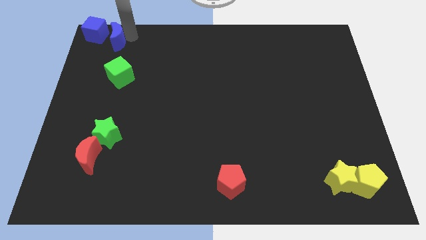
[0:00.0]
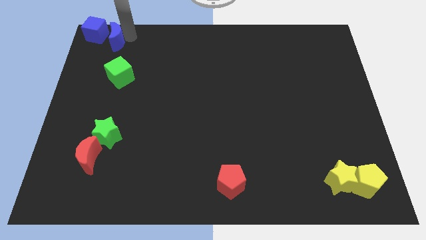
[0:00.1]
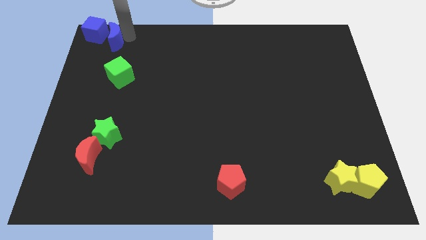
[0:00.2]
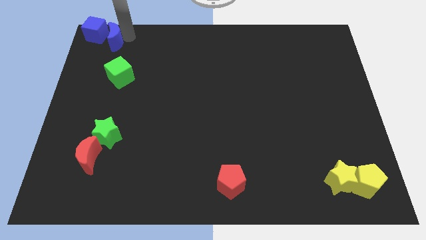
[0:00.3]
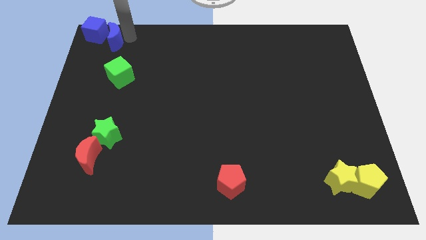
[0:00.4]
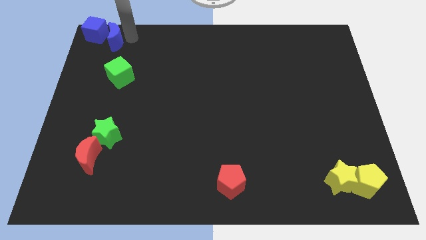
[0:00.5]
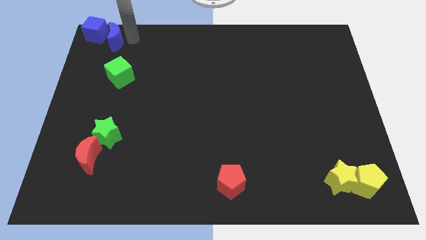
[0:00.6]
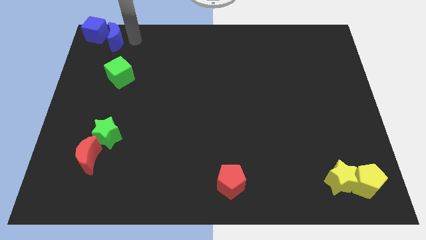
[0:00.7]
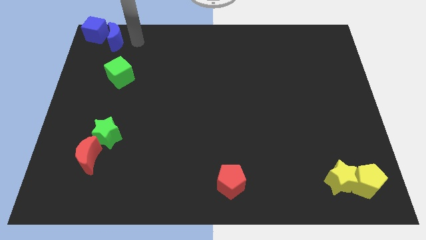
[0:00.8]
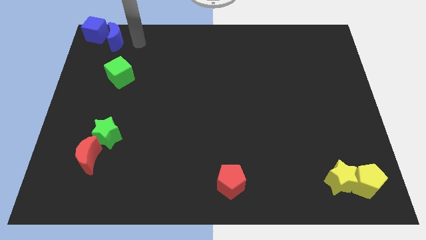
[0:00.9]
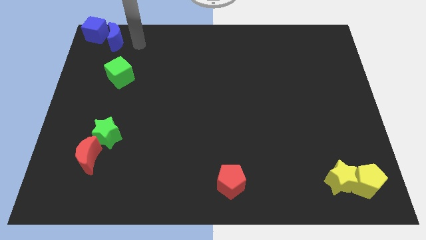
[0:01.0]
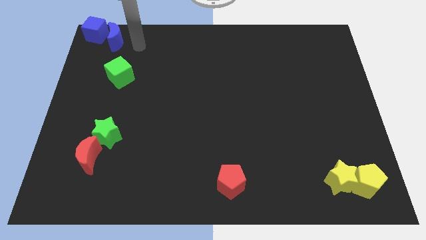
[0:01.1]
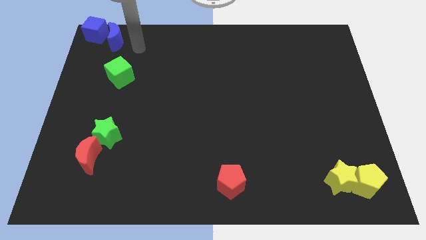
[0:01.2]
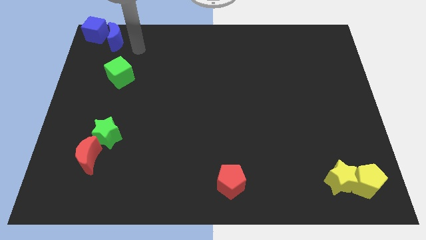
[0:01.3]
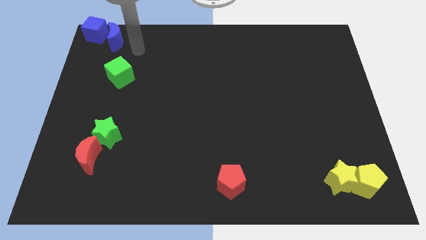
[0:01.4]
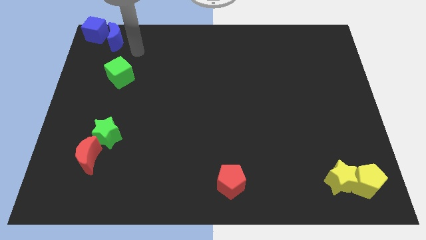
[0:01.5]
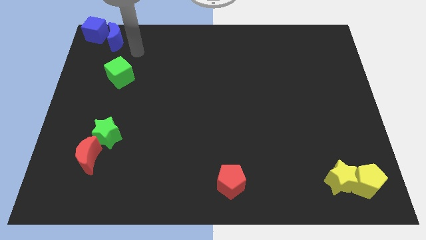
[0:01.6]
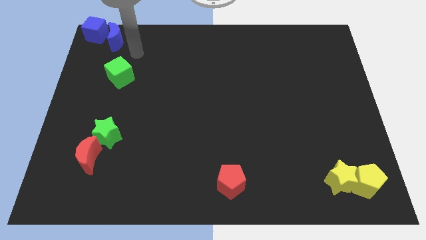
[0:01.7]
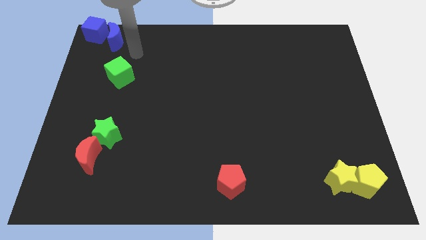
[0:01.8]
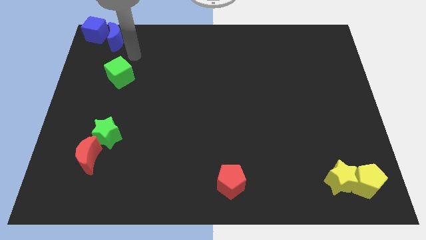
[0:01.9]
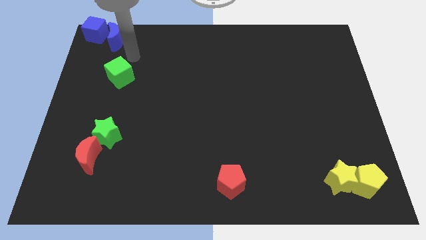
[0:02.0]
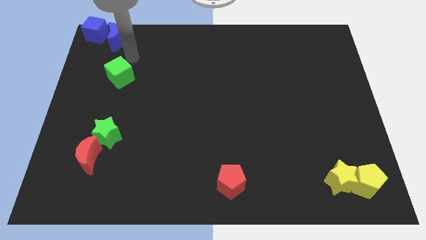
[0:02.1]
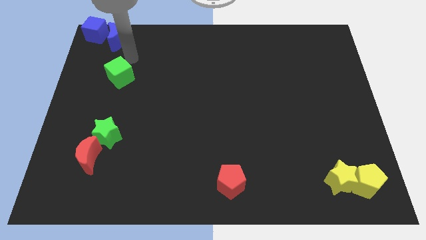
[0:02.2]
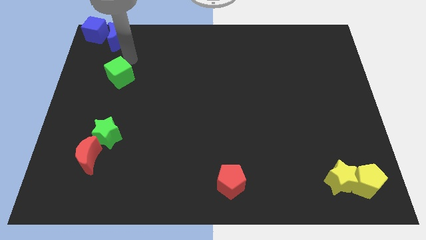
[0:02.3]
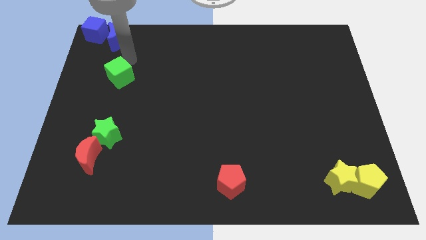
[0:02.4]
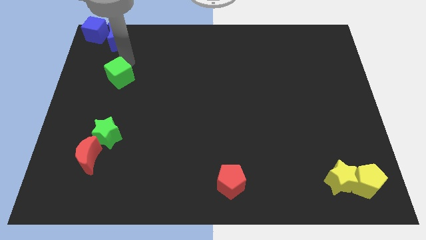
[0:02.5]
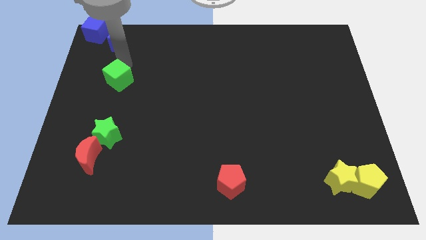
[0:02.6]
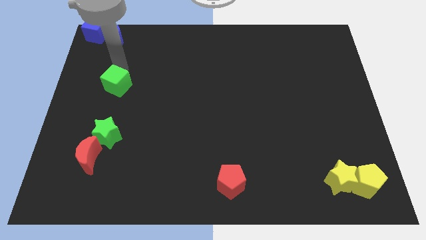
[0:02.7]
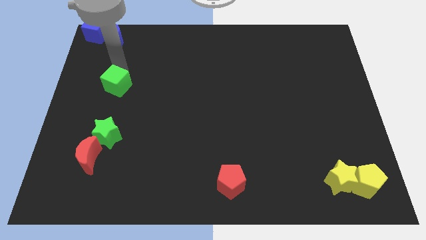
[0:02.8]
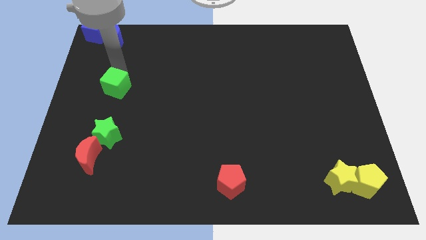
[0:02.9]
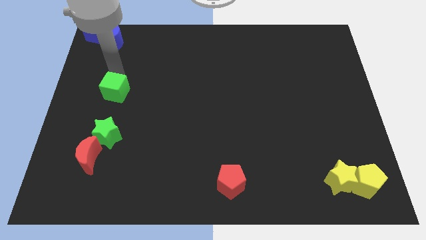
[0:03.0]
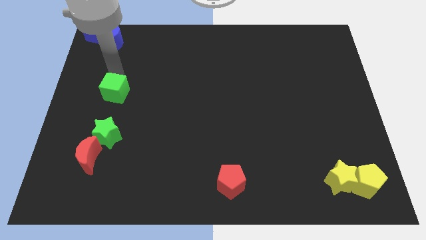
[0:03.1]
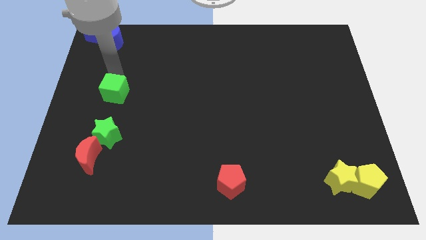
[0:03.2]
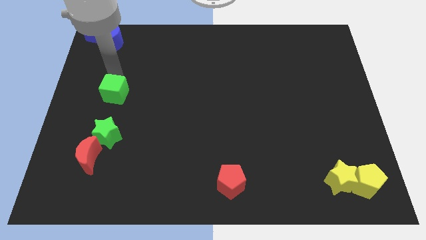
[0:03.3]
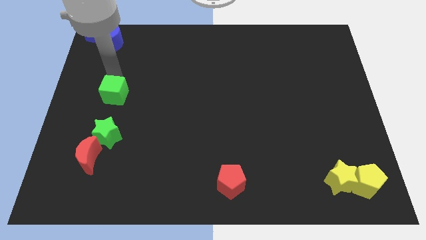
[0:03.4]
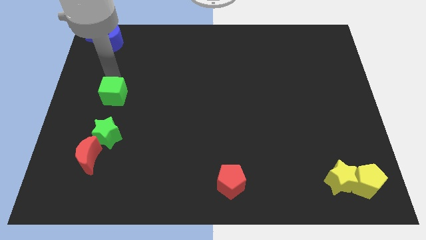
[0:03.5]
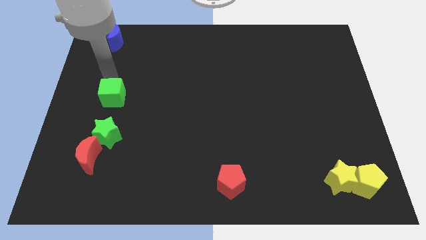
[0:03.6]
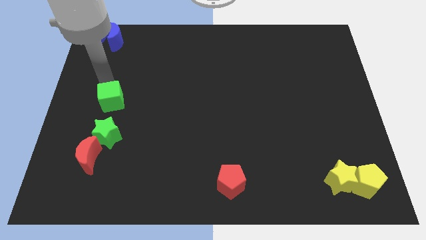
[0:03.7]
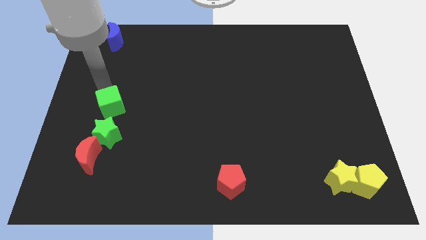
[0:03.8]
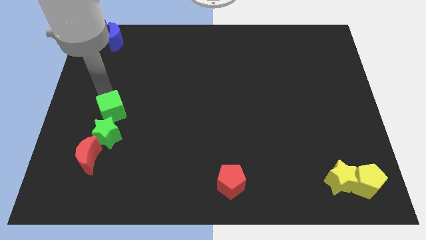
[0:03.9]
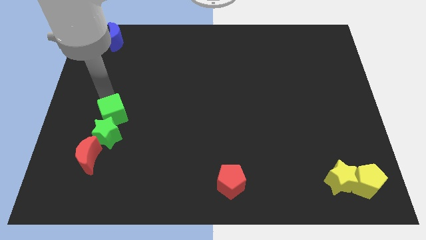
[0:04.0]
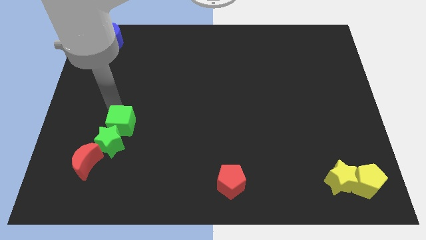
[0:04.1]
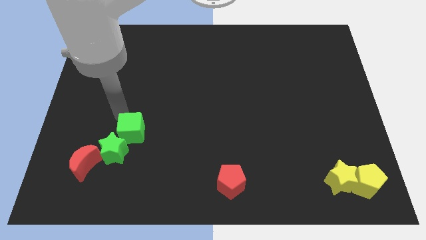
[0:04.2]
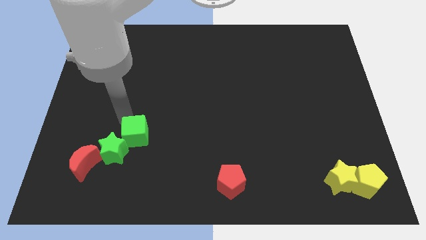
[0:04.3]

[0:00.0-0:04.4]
move the green cube to the green star

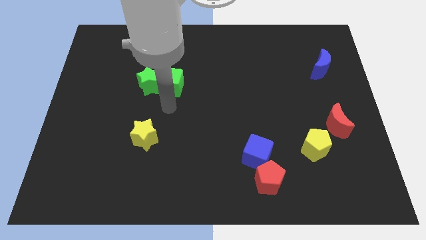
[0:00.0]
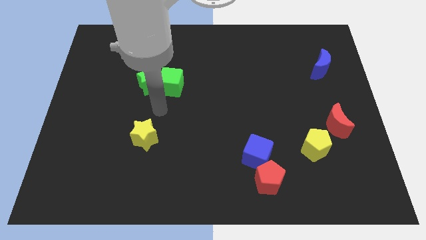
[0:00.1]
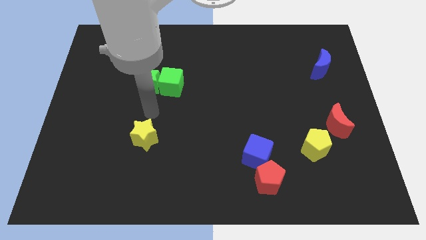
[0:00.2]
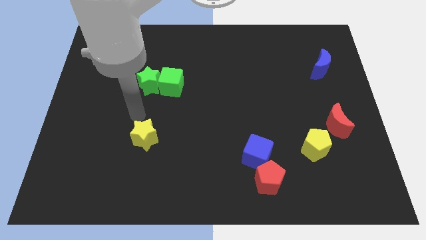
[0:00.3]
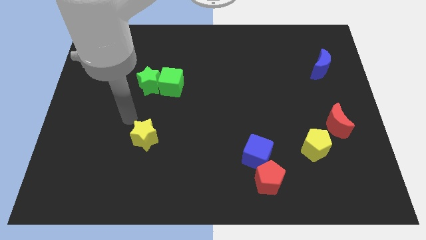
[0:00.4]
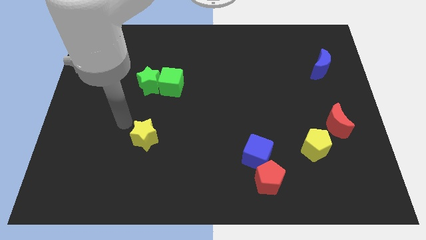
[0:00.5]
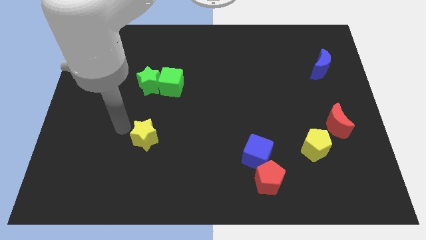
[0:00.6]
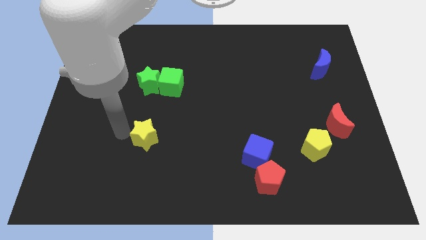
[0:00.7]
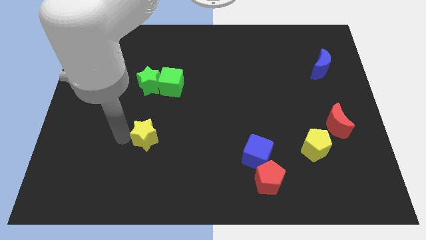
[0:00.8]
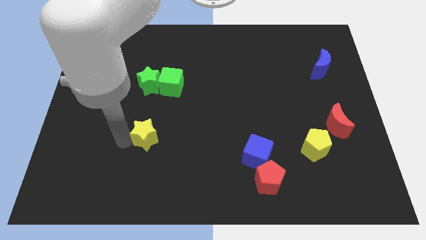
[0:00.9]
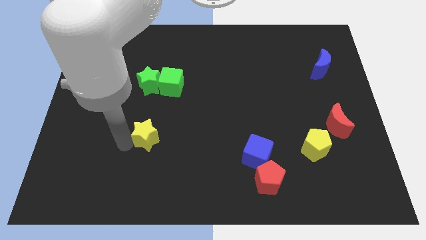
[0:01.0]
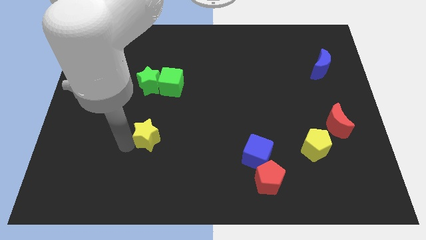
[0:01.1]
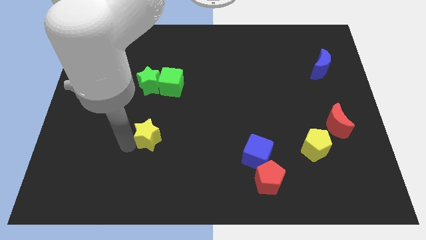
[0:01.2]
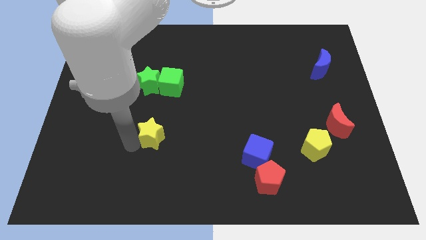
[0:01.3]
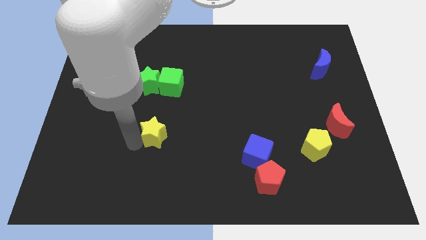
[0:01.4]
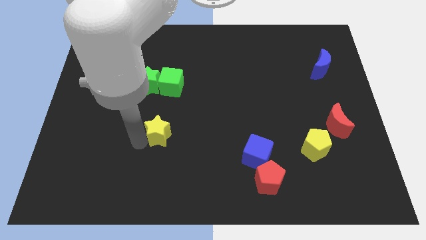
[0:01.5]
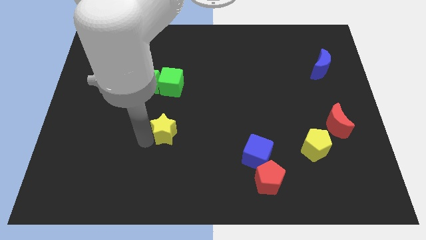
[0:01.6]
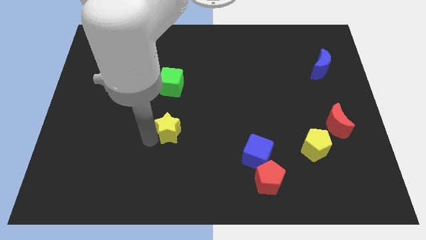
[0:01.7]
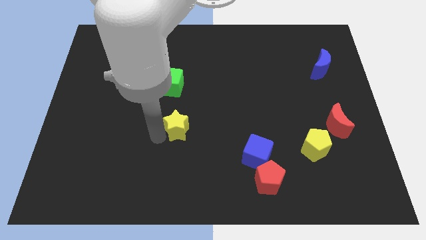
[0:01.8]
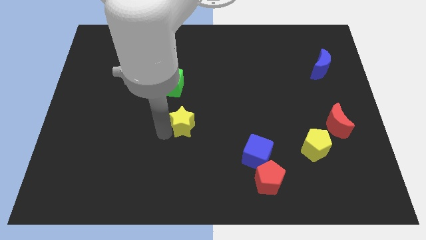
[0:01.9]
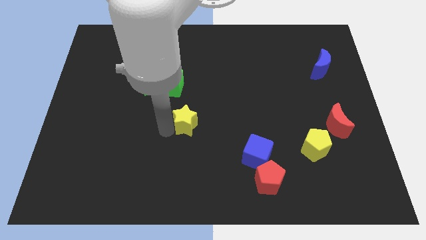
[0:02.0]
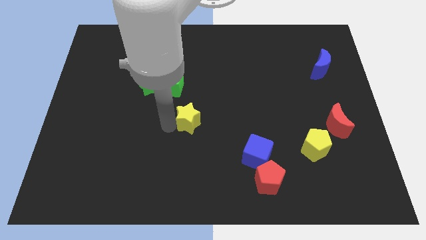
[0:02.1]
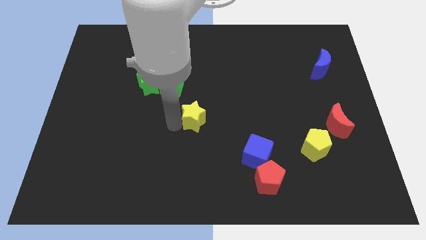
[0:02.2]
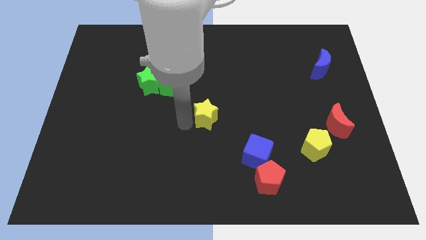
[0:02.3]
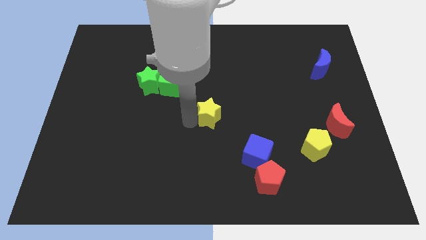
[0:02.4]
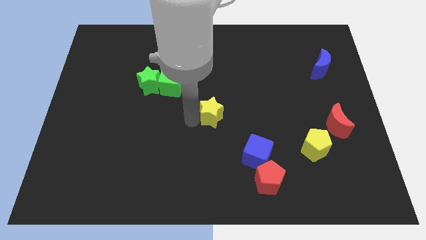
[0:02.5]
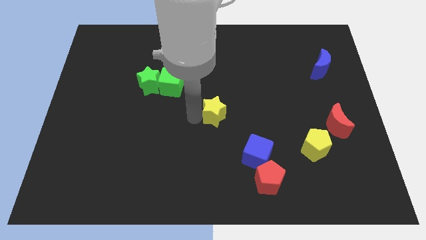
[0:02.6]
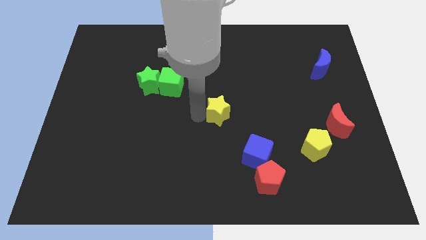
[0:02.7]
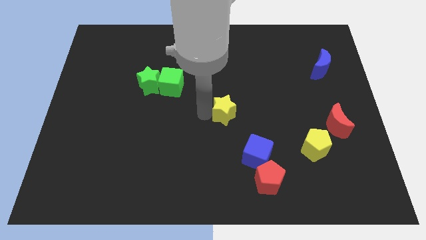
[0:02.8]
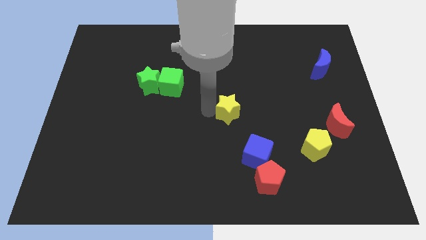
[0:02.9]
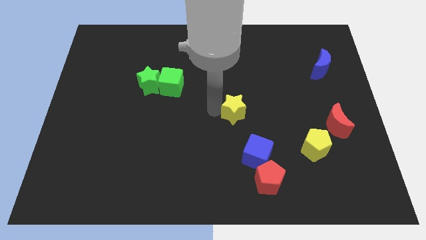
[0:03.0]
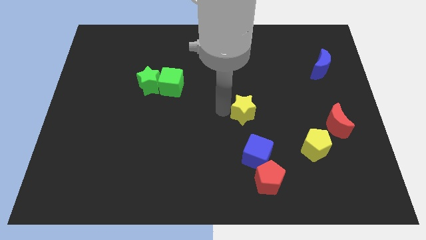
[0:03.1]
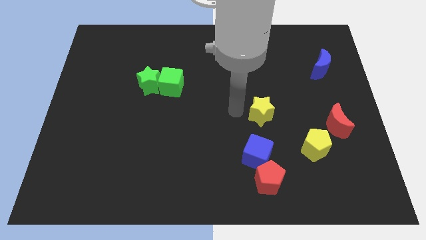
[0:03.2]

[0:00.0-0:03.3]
place the yellow star above the blue cube

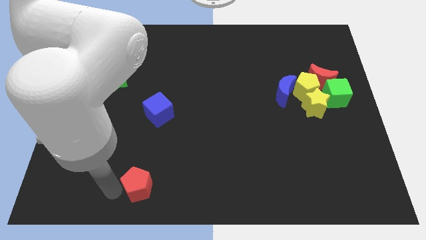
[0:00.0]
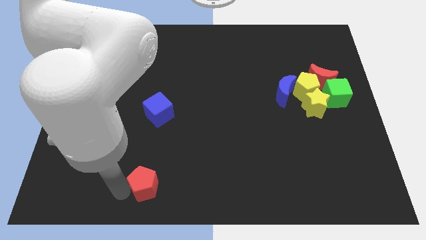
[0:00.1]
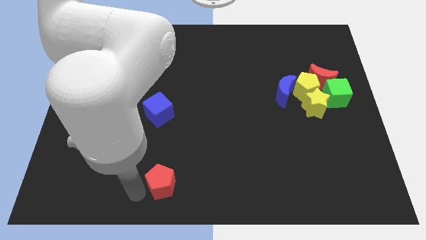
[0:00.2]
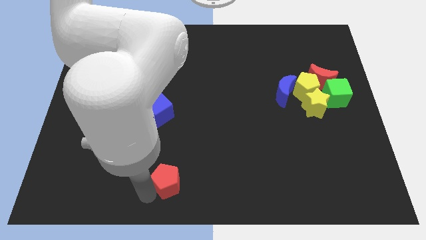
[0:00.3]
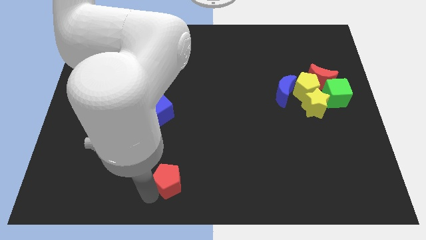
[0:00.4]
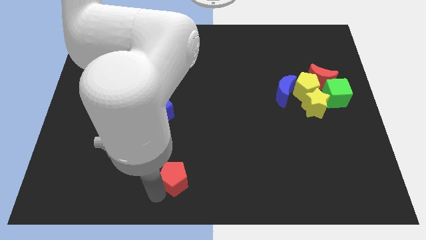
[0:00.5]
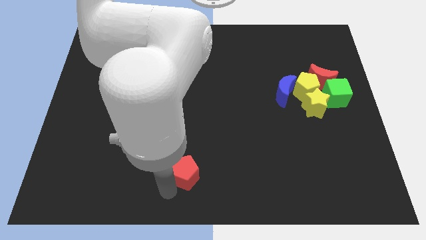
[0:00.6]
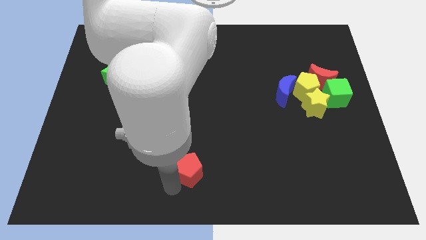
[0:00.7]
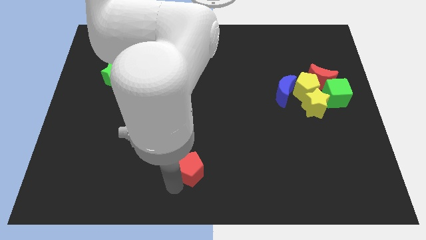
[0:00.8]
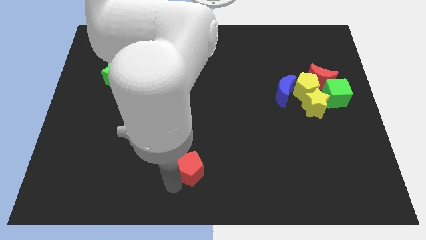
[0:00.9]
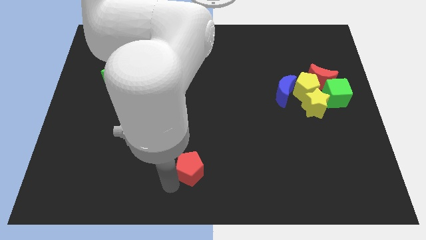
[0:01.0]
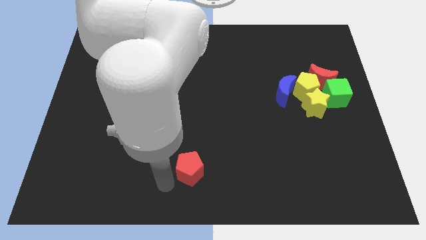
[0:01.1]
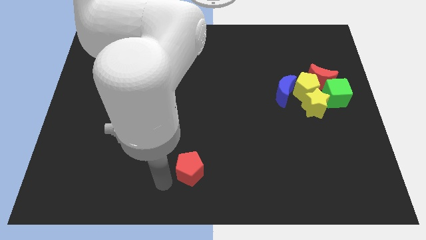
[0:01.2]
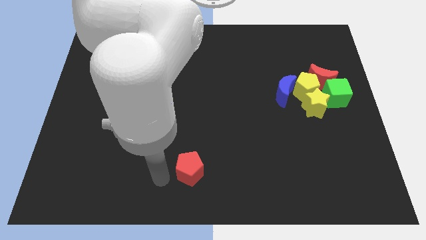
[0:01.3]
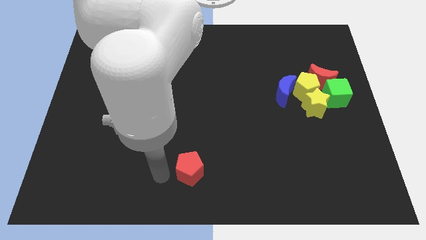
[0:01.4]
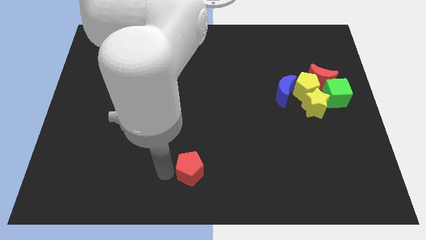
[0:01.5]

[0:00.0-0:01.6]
push the red pentagon towards the right side of the board
